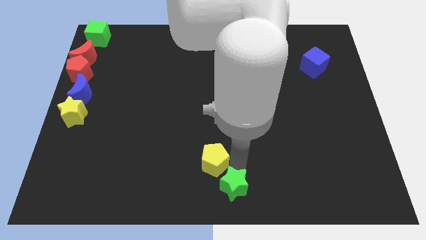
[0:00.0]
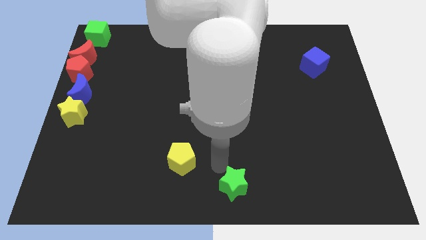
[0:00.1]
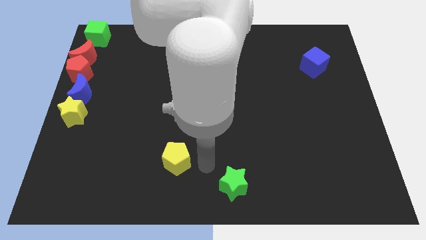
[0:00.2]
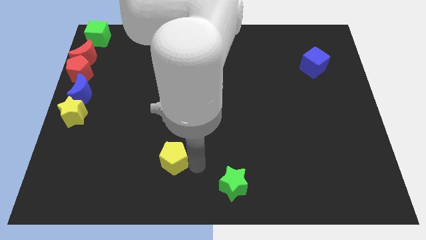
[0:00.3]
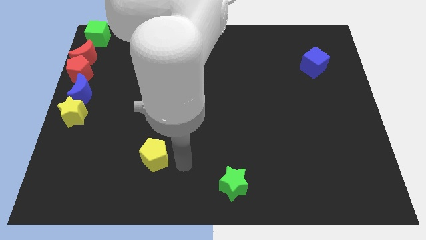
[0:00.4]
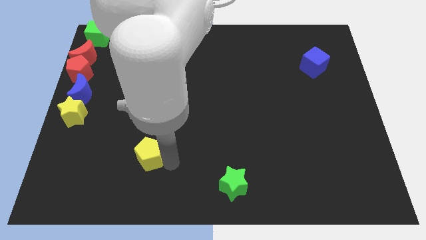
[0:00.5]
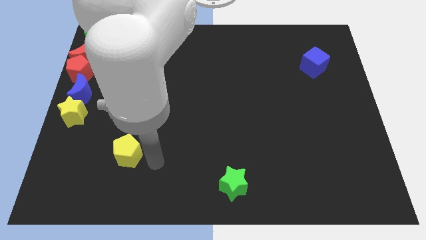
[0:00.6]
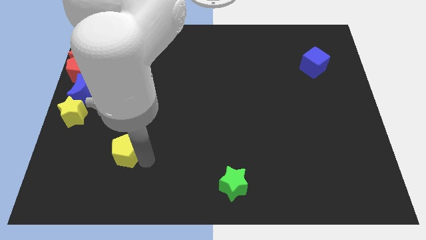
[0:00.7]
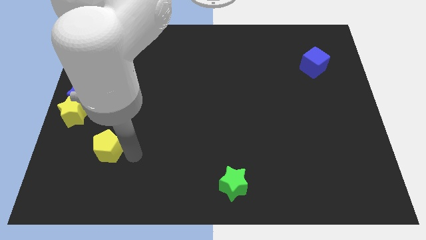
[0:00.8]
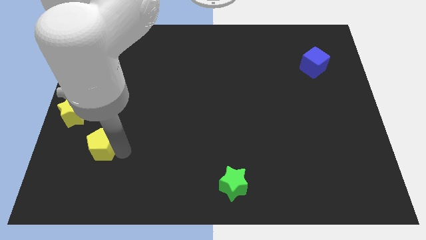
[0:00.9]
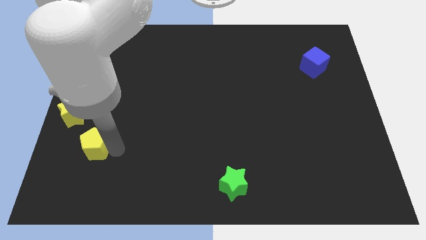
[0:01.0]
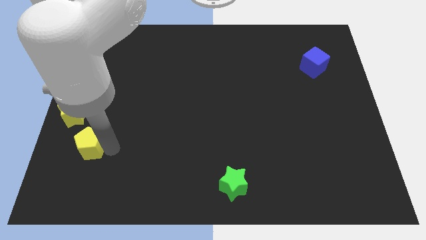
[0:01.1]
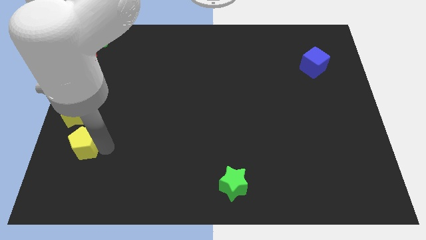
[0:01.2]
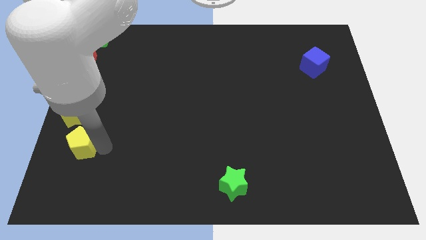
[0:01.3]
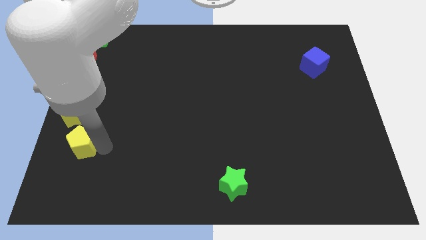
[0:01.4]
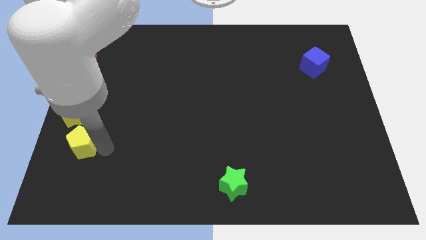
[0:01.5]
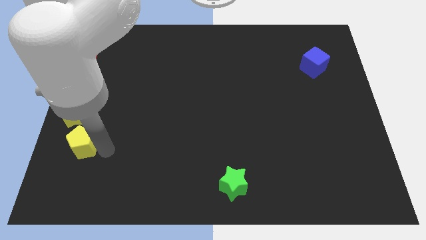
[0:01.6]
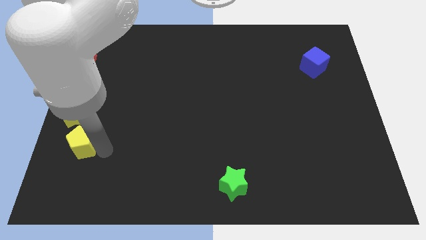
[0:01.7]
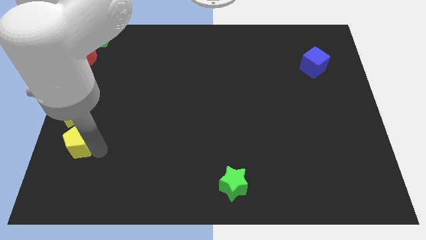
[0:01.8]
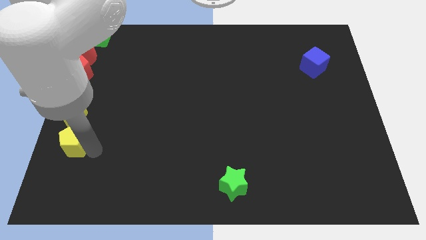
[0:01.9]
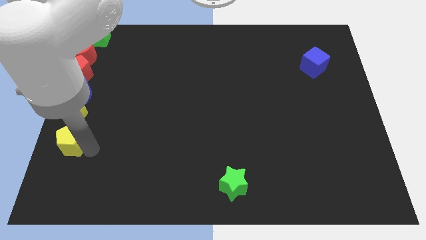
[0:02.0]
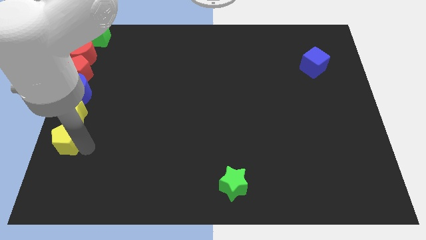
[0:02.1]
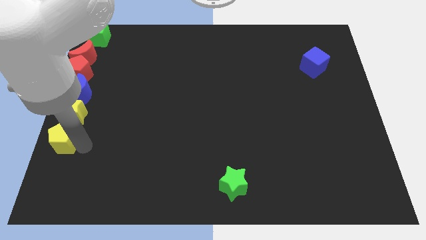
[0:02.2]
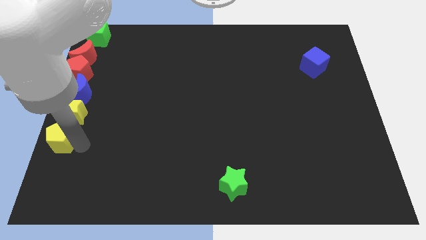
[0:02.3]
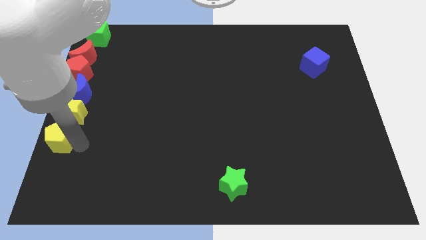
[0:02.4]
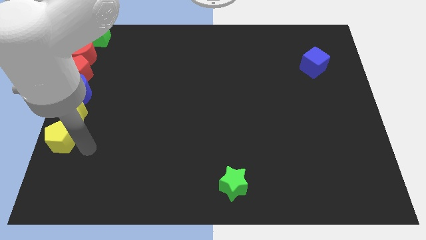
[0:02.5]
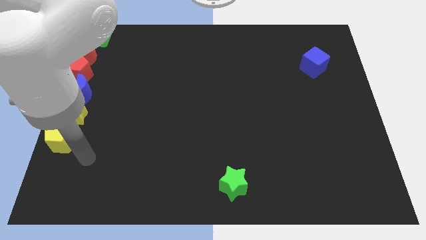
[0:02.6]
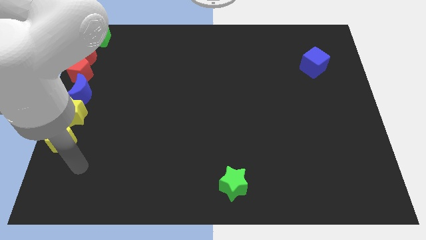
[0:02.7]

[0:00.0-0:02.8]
move the yellow pentagon to the bottom of the yellow star

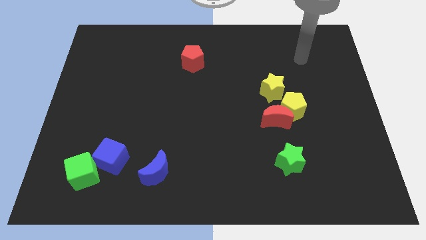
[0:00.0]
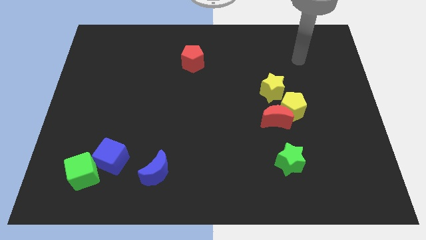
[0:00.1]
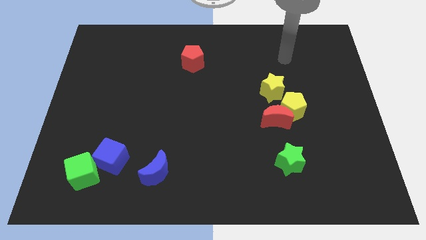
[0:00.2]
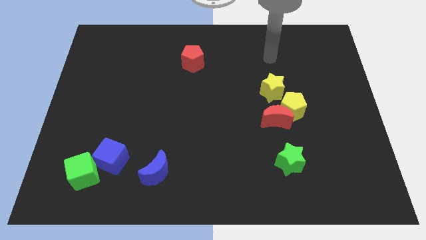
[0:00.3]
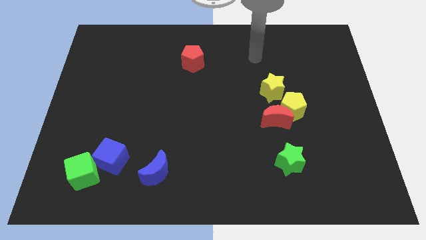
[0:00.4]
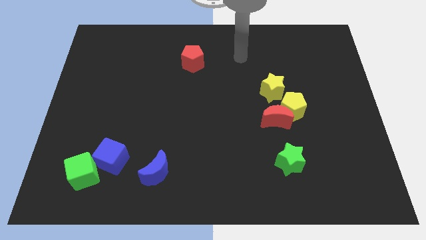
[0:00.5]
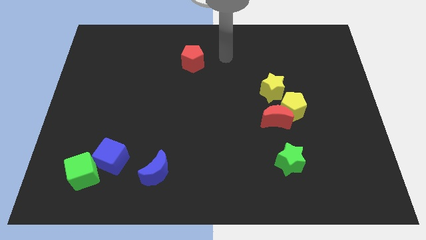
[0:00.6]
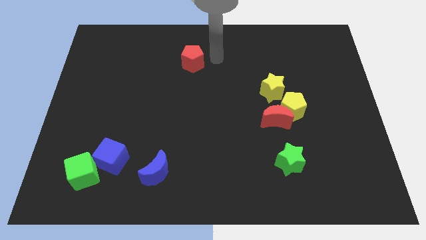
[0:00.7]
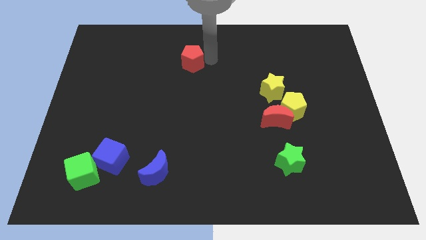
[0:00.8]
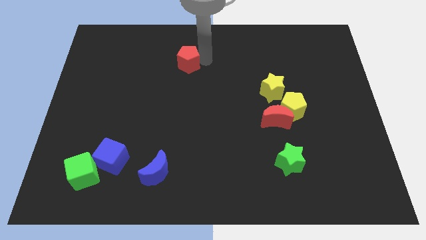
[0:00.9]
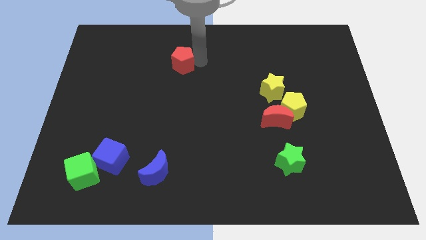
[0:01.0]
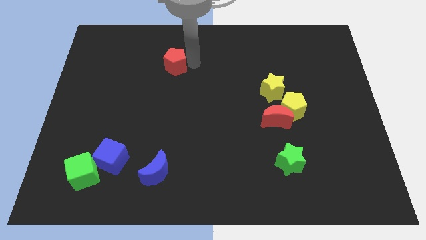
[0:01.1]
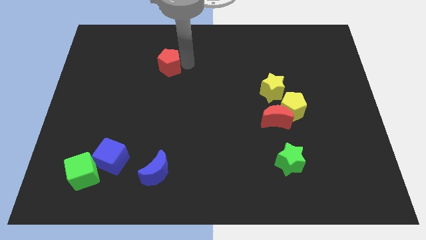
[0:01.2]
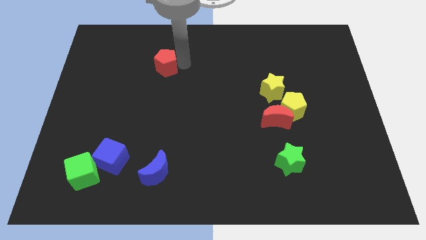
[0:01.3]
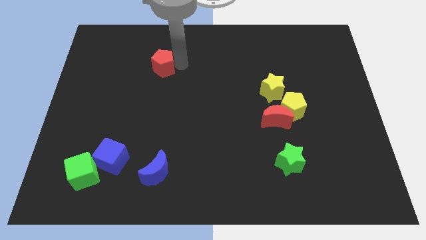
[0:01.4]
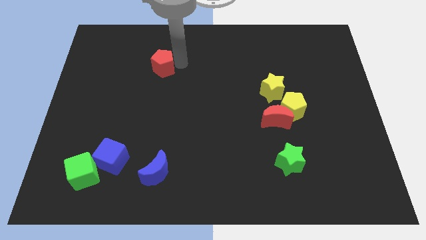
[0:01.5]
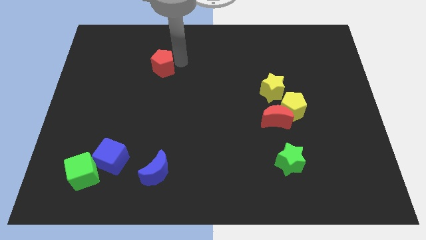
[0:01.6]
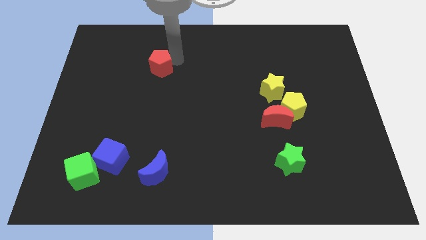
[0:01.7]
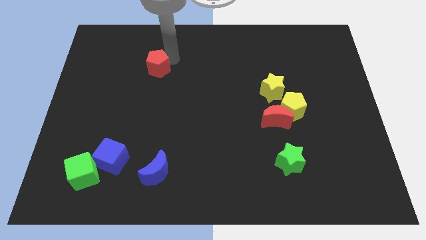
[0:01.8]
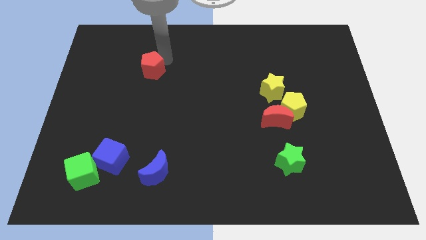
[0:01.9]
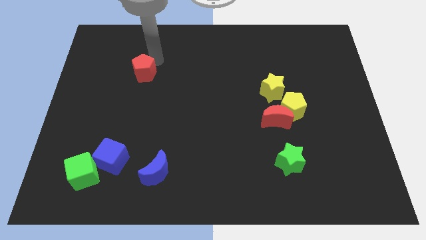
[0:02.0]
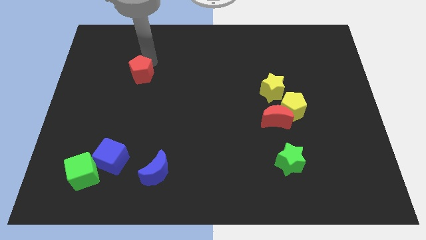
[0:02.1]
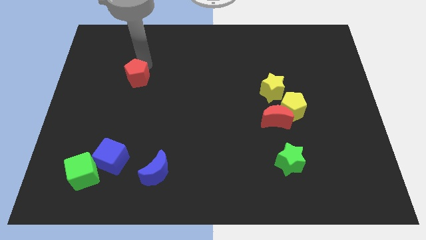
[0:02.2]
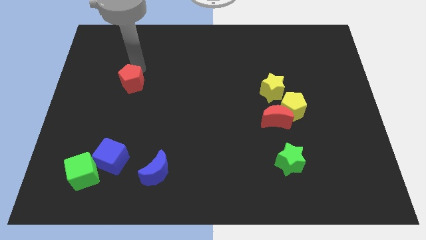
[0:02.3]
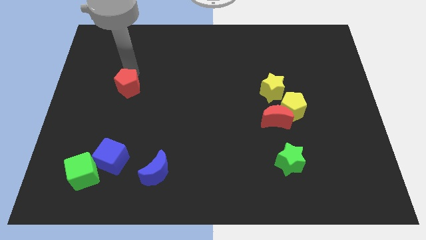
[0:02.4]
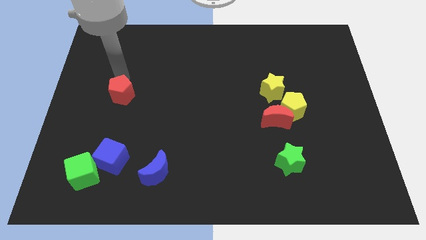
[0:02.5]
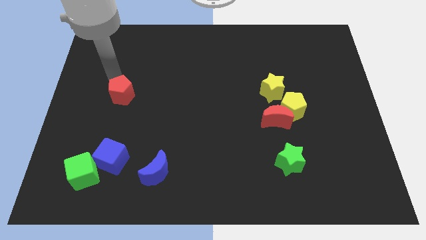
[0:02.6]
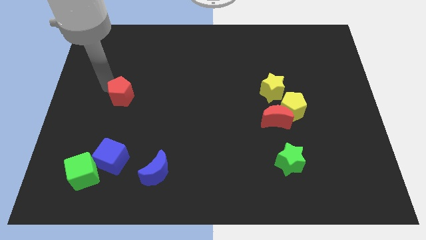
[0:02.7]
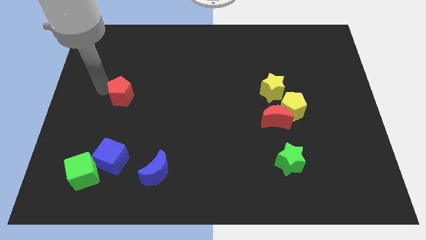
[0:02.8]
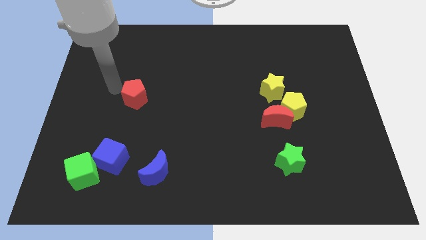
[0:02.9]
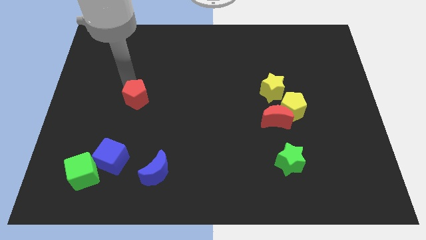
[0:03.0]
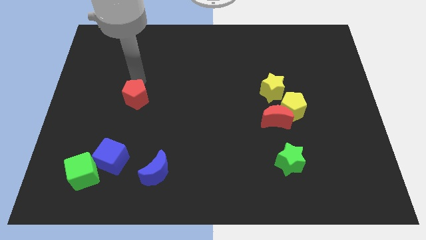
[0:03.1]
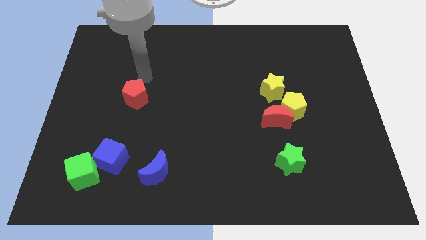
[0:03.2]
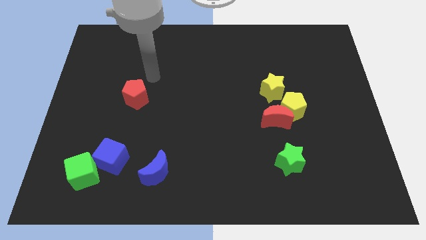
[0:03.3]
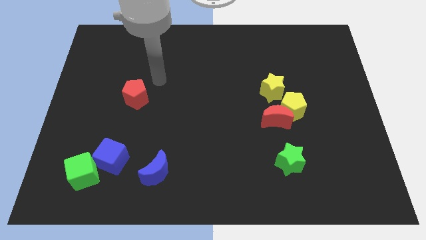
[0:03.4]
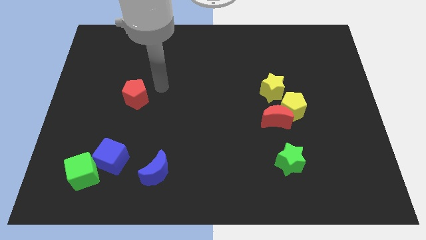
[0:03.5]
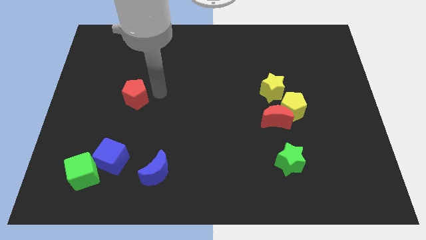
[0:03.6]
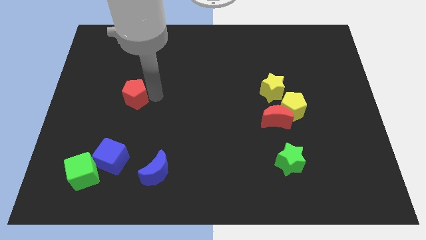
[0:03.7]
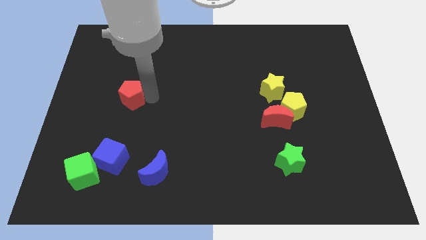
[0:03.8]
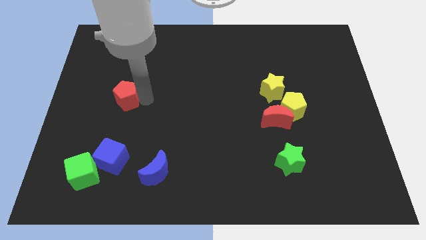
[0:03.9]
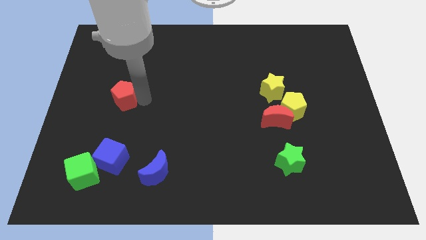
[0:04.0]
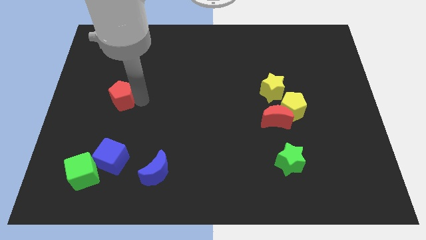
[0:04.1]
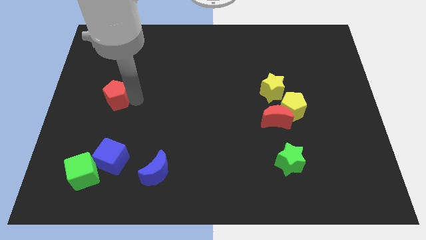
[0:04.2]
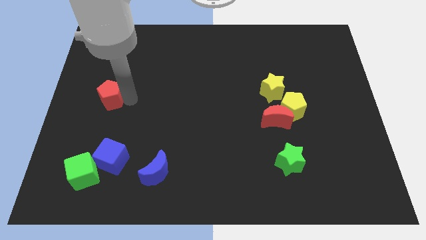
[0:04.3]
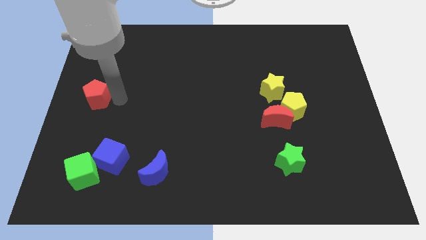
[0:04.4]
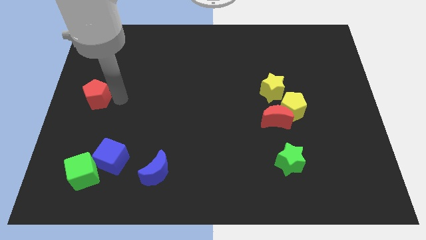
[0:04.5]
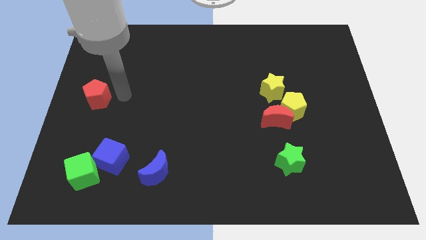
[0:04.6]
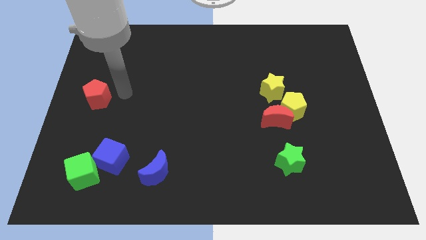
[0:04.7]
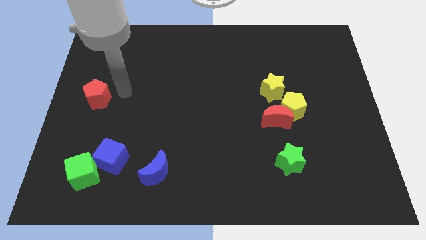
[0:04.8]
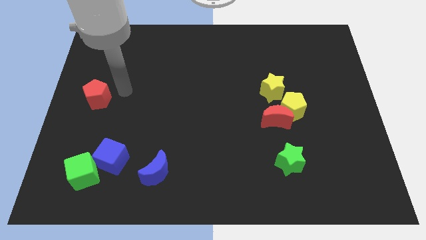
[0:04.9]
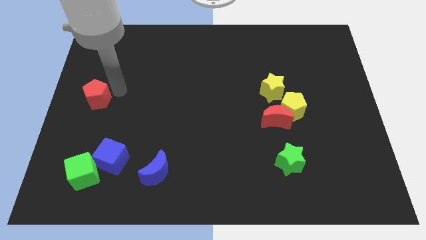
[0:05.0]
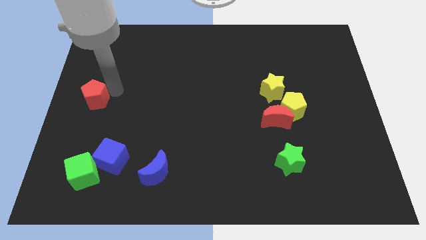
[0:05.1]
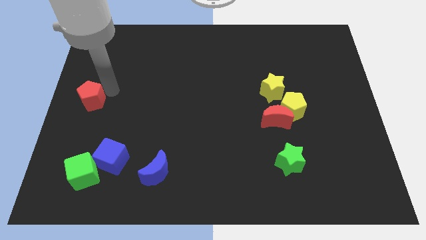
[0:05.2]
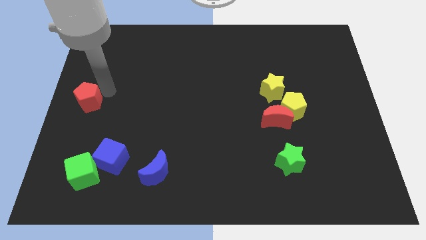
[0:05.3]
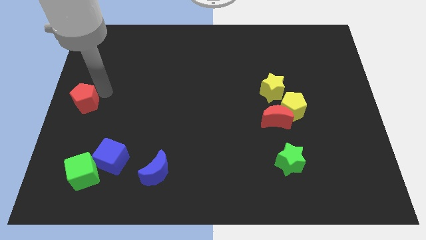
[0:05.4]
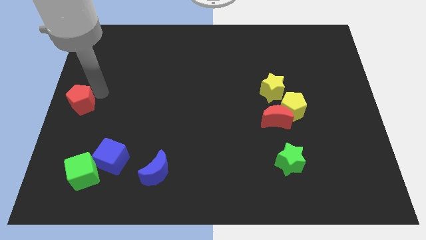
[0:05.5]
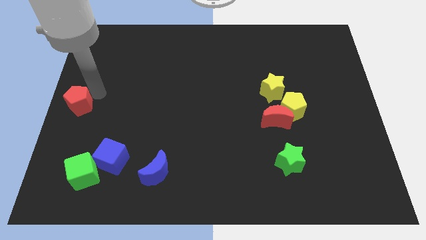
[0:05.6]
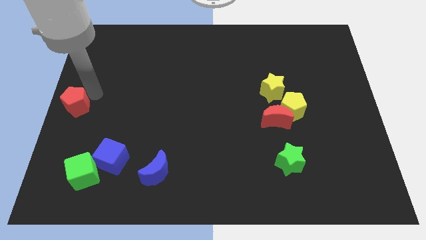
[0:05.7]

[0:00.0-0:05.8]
push the red pentagon to the left center of the board

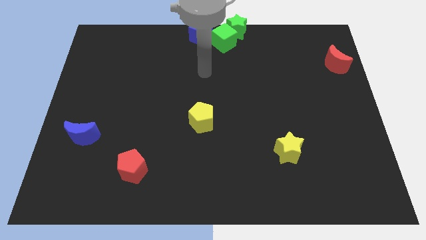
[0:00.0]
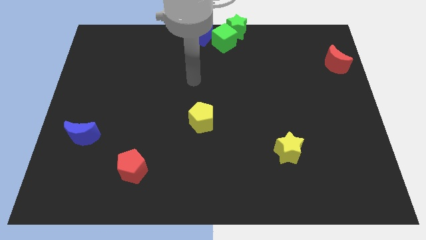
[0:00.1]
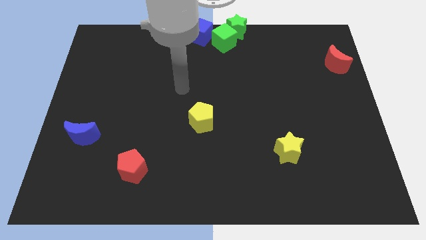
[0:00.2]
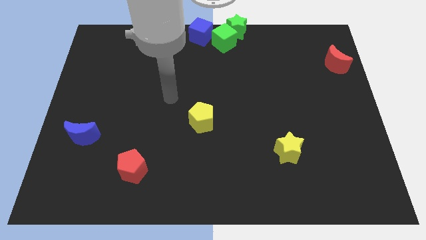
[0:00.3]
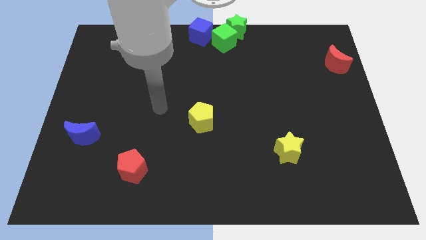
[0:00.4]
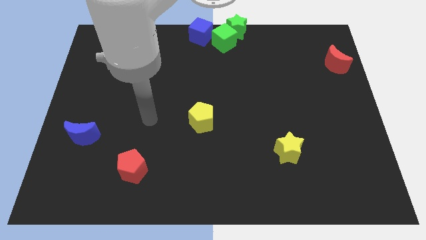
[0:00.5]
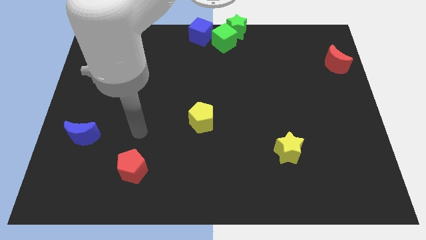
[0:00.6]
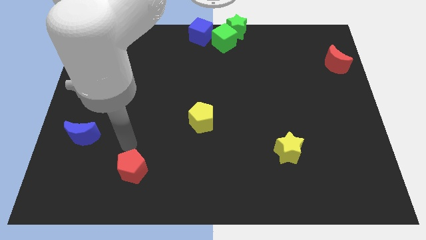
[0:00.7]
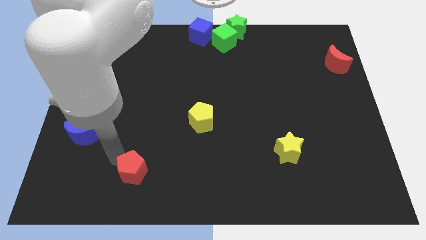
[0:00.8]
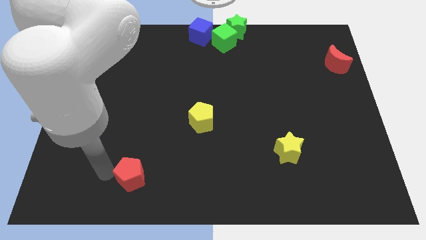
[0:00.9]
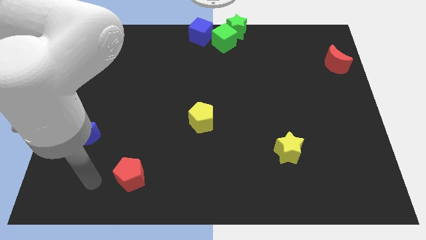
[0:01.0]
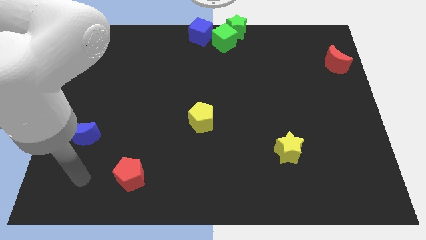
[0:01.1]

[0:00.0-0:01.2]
touch the red pentagon
